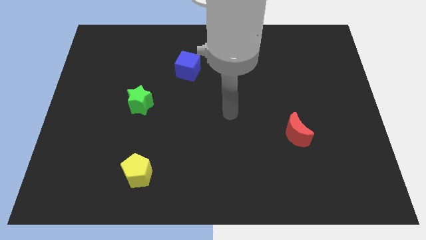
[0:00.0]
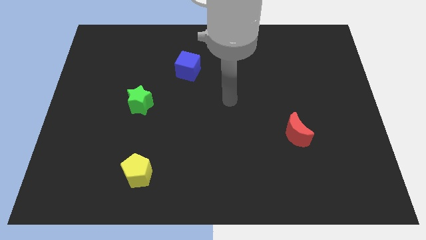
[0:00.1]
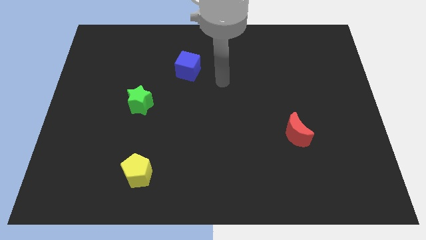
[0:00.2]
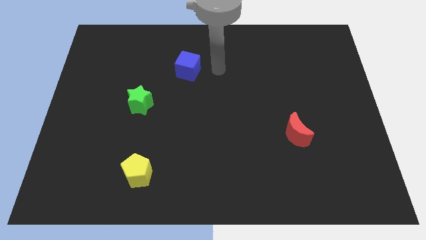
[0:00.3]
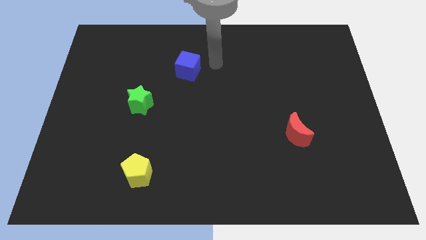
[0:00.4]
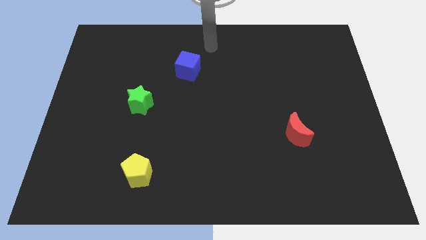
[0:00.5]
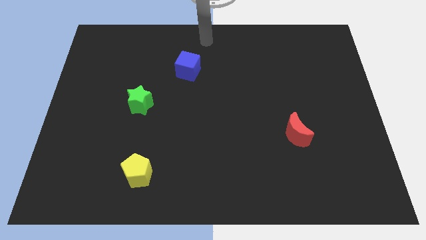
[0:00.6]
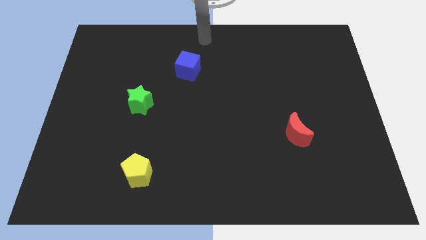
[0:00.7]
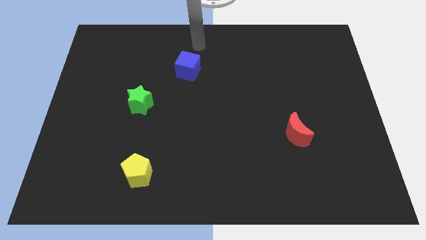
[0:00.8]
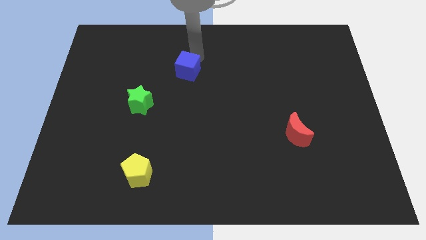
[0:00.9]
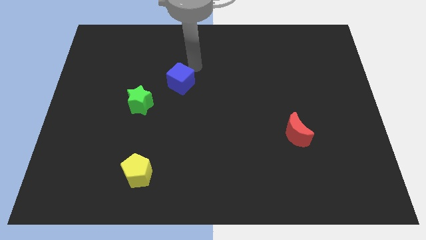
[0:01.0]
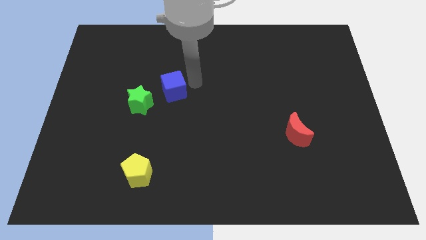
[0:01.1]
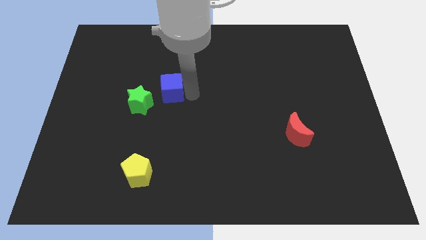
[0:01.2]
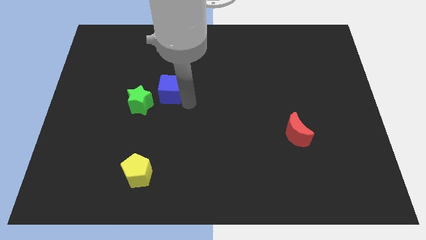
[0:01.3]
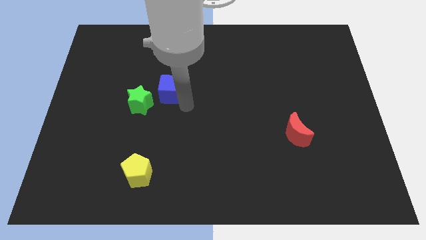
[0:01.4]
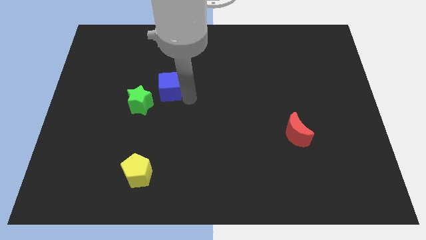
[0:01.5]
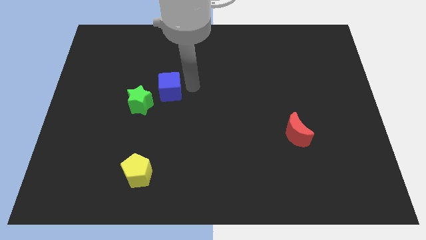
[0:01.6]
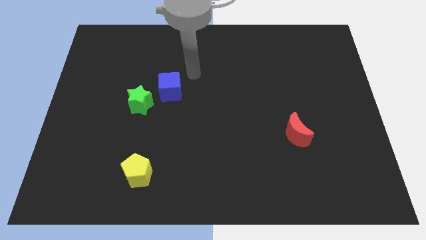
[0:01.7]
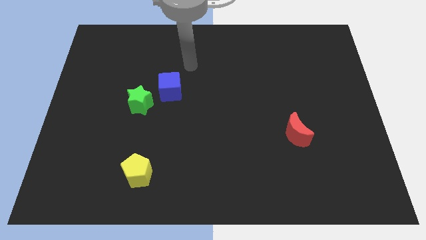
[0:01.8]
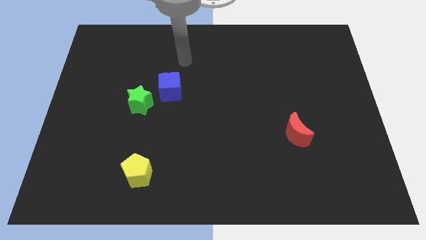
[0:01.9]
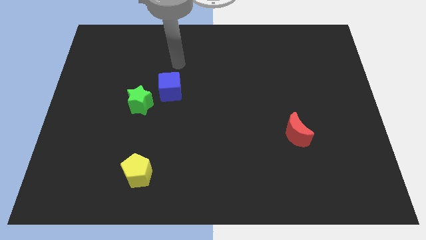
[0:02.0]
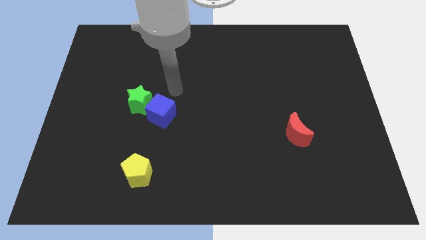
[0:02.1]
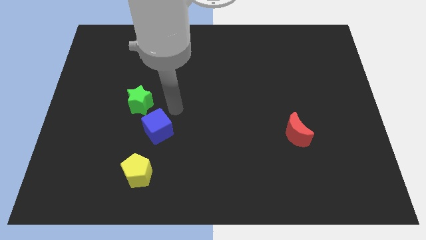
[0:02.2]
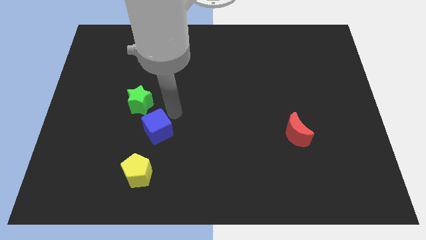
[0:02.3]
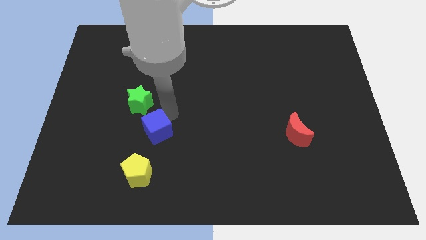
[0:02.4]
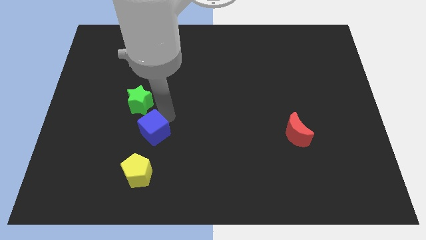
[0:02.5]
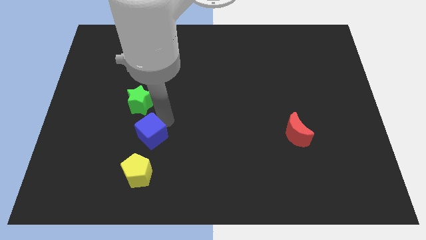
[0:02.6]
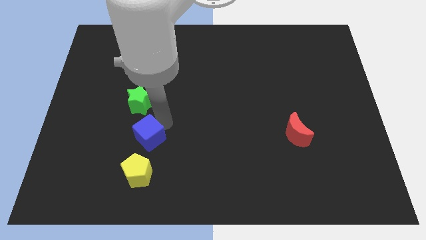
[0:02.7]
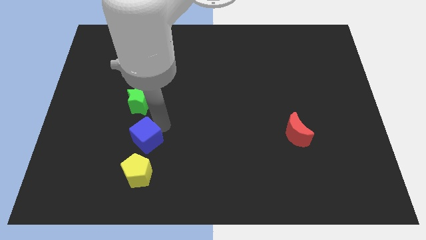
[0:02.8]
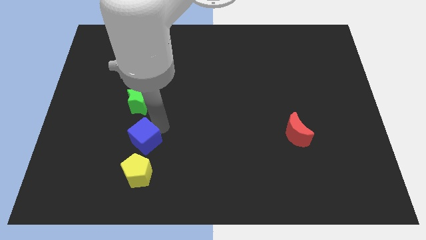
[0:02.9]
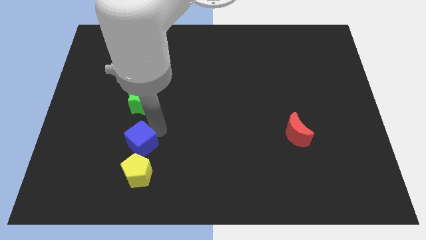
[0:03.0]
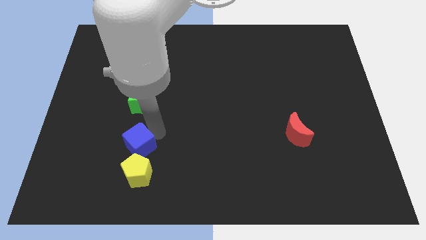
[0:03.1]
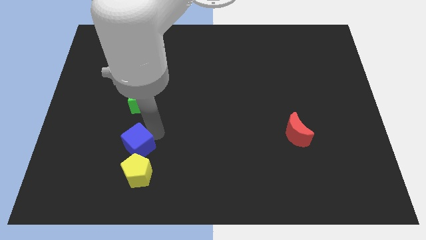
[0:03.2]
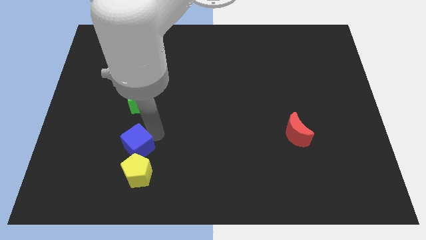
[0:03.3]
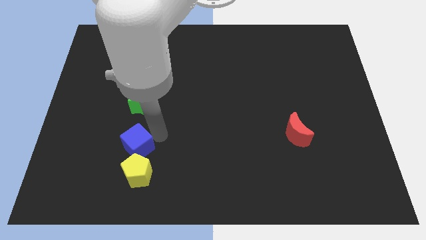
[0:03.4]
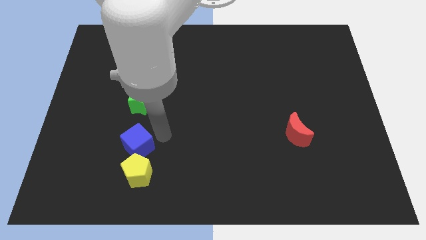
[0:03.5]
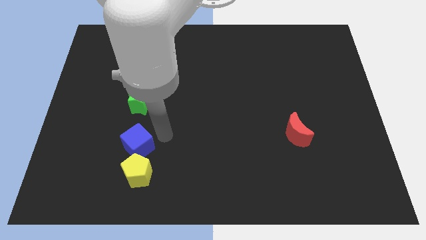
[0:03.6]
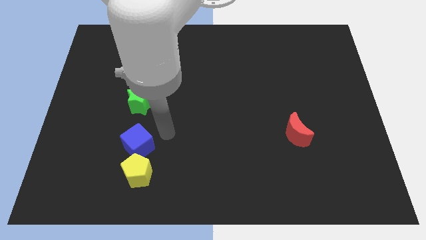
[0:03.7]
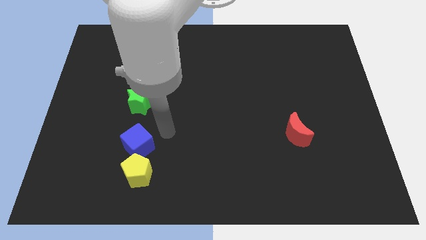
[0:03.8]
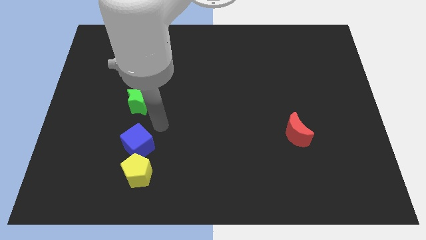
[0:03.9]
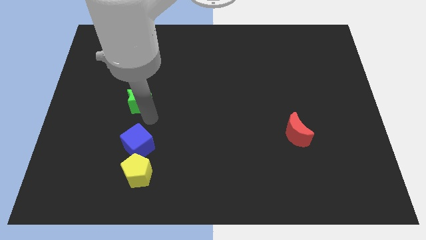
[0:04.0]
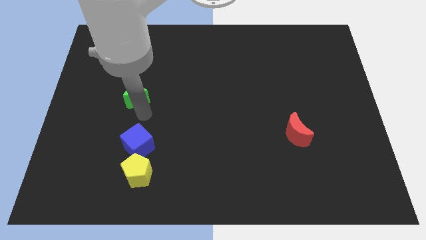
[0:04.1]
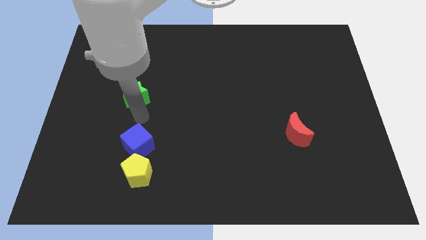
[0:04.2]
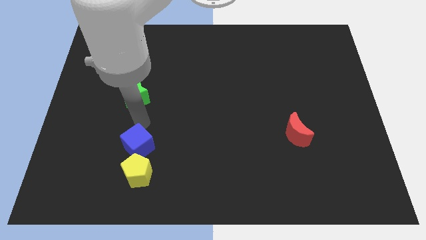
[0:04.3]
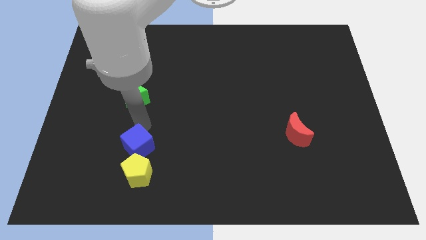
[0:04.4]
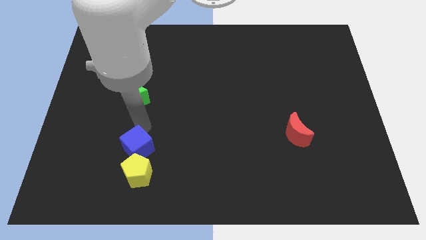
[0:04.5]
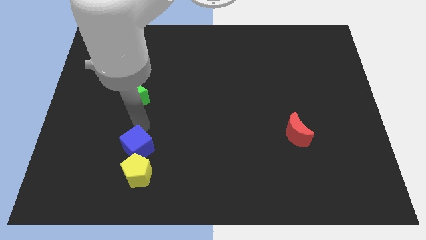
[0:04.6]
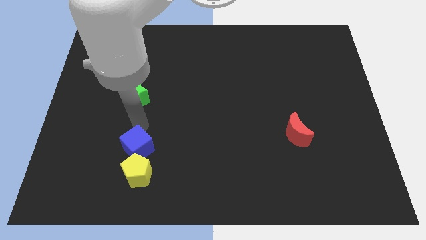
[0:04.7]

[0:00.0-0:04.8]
slide the blue cube towards the yellow pentagon

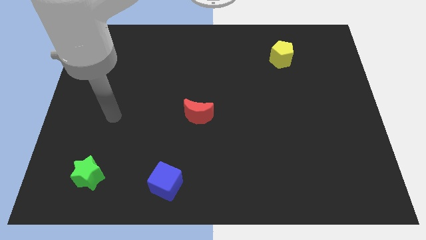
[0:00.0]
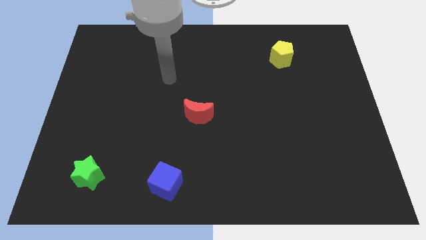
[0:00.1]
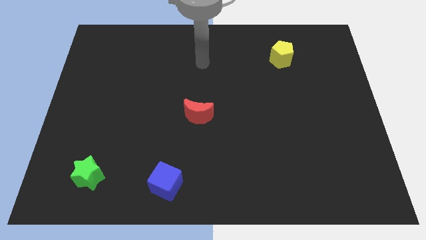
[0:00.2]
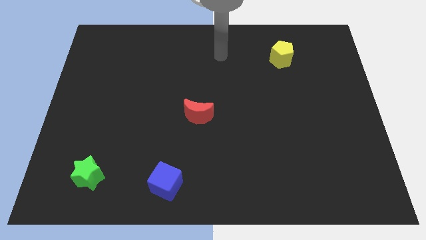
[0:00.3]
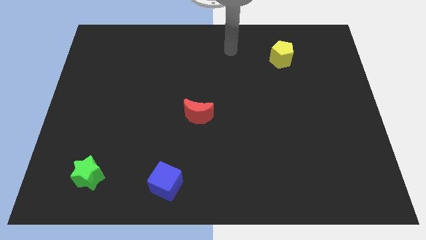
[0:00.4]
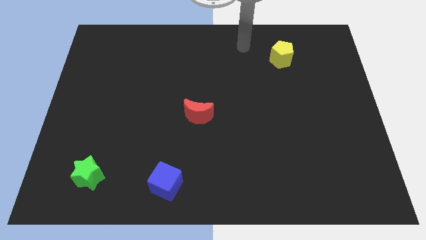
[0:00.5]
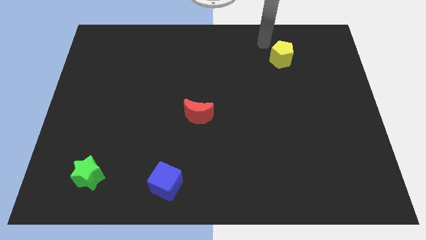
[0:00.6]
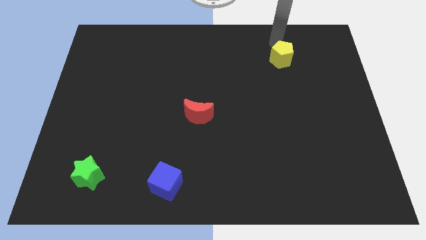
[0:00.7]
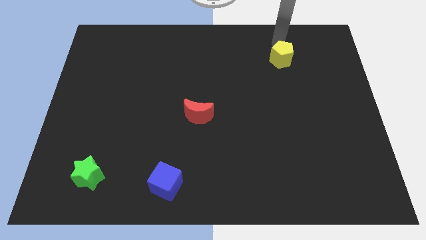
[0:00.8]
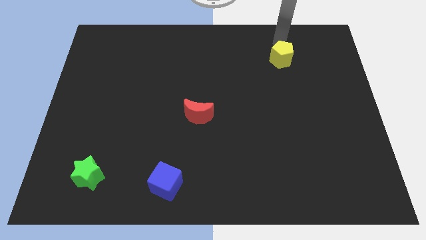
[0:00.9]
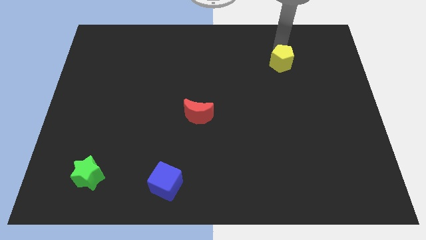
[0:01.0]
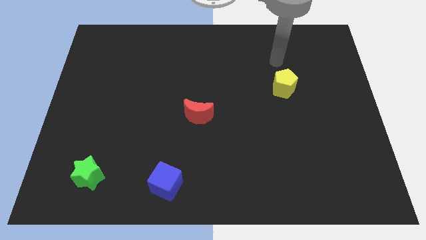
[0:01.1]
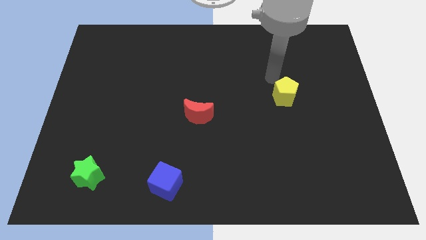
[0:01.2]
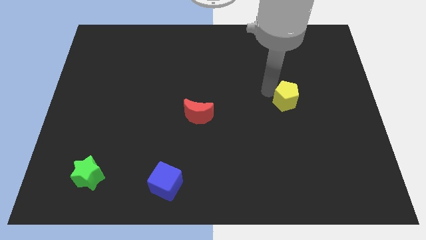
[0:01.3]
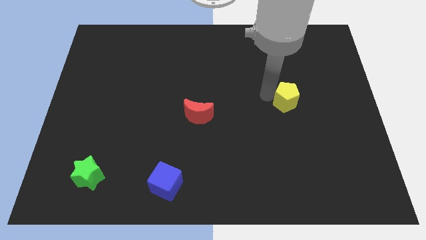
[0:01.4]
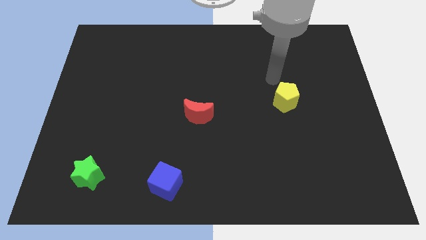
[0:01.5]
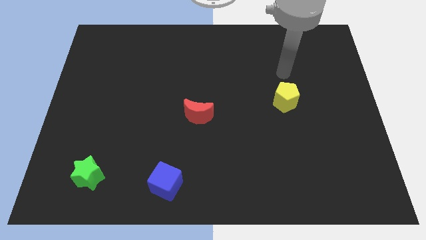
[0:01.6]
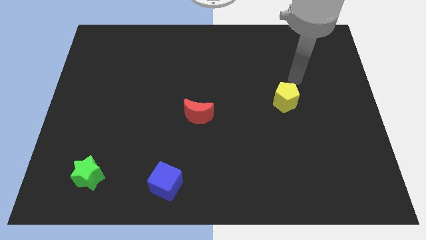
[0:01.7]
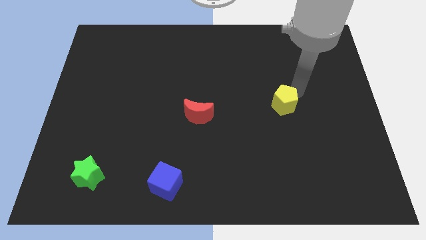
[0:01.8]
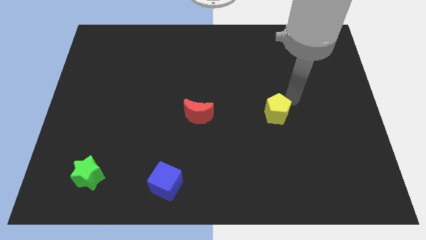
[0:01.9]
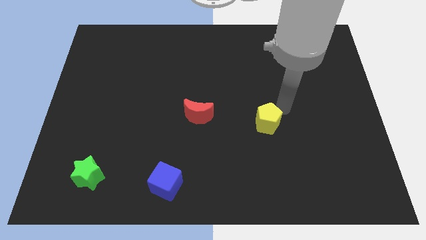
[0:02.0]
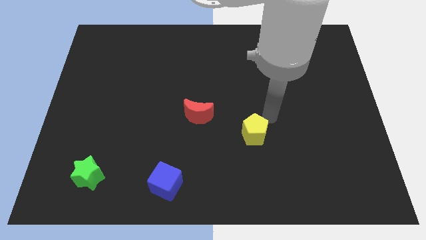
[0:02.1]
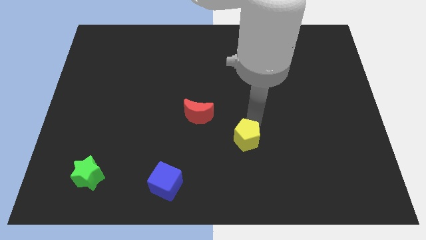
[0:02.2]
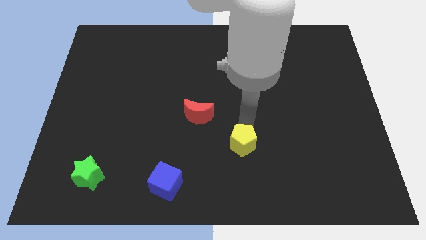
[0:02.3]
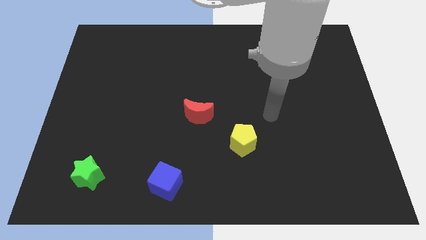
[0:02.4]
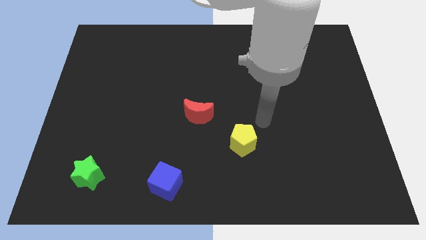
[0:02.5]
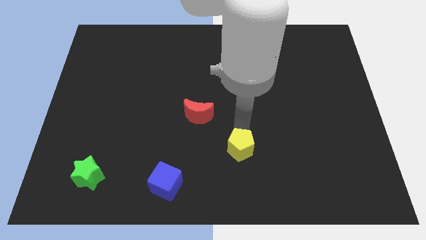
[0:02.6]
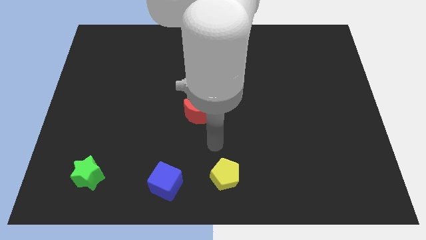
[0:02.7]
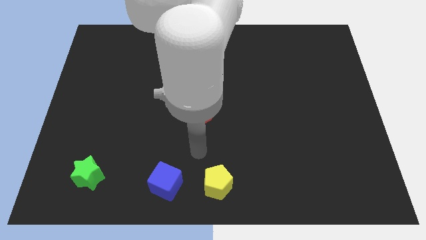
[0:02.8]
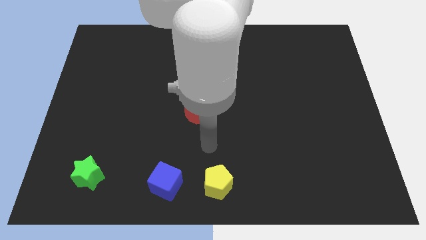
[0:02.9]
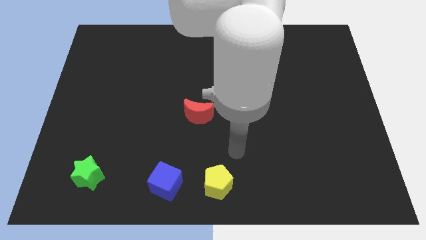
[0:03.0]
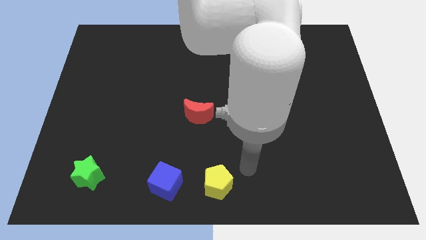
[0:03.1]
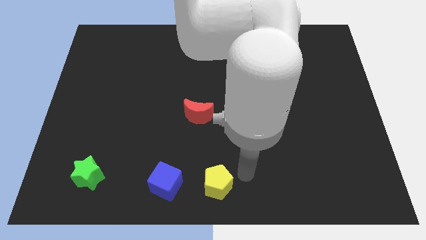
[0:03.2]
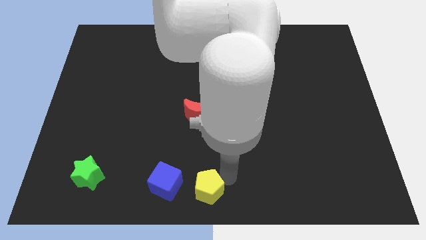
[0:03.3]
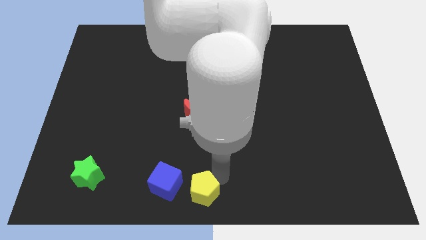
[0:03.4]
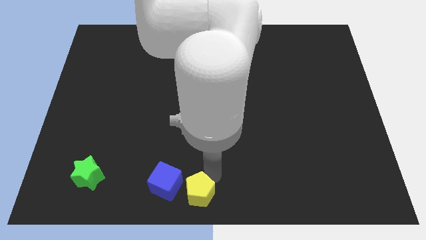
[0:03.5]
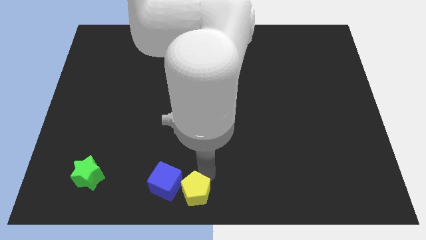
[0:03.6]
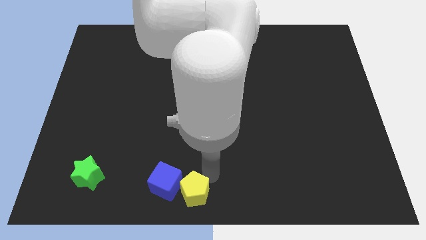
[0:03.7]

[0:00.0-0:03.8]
push the yellow pentagon to the blue cube
